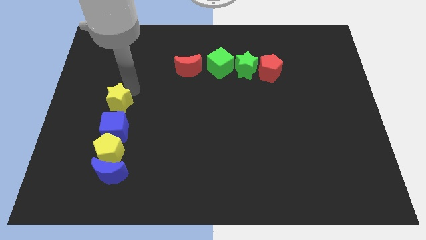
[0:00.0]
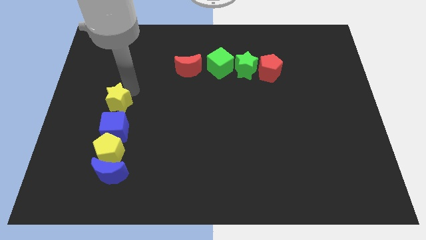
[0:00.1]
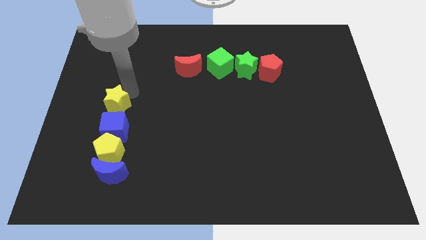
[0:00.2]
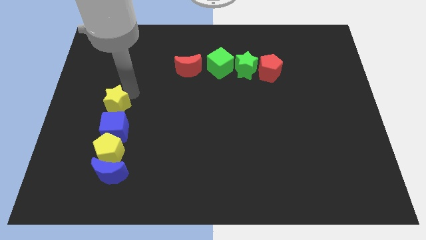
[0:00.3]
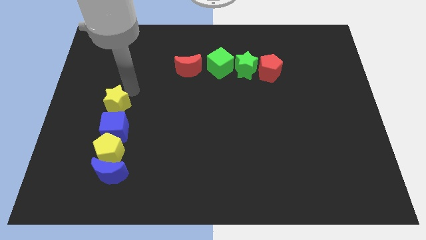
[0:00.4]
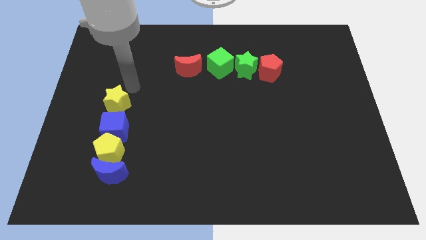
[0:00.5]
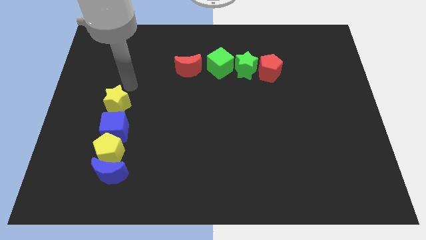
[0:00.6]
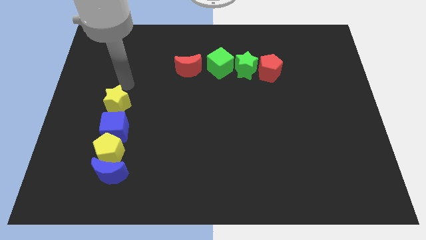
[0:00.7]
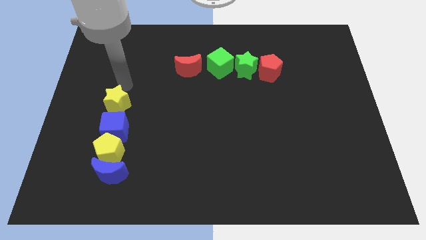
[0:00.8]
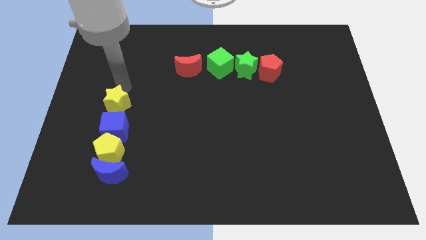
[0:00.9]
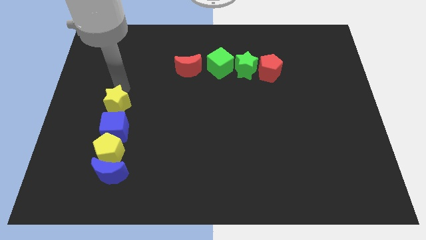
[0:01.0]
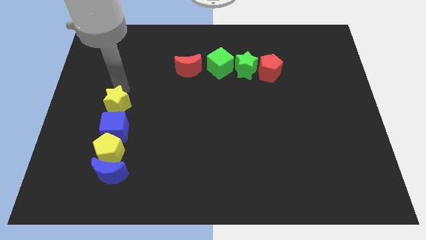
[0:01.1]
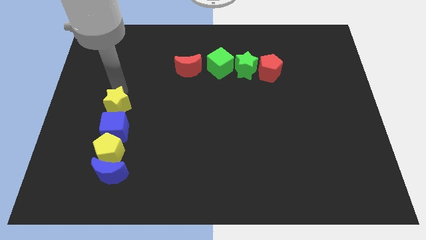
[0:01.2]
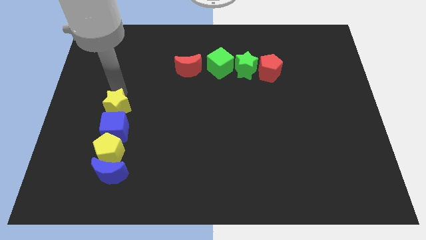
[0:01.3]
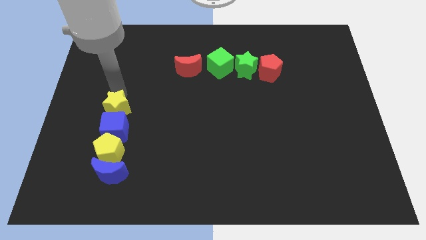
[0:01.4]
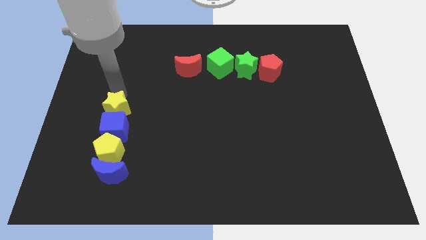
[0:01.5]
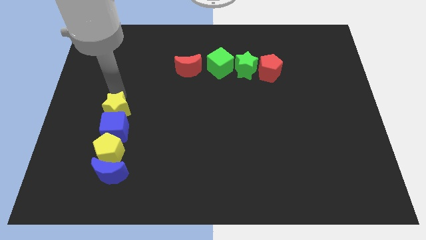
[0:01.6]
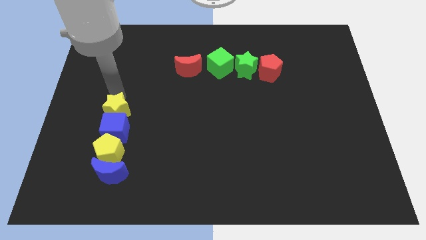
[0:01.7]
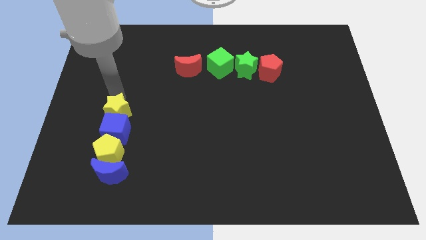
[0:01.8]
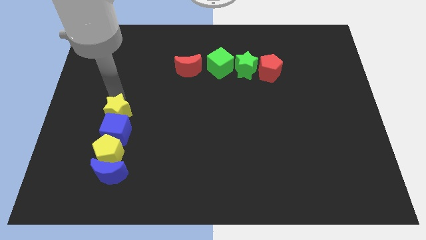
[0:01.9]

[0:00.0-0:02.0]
push the yellow star into the blue cube

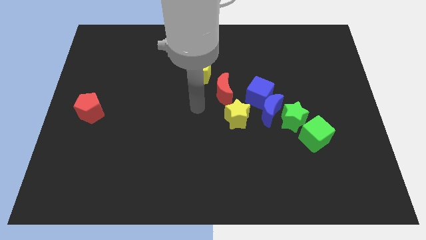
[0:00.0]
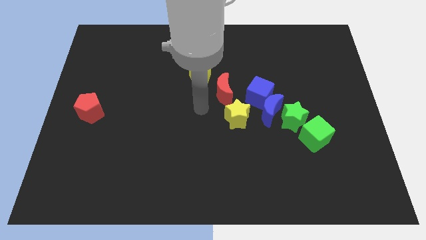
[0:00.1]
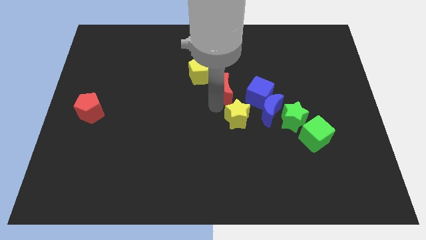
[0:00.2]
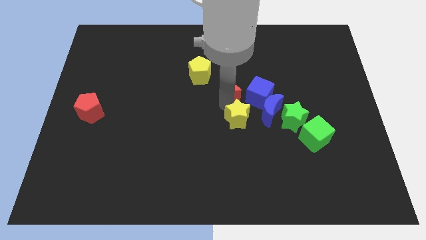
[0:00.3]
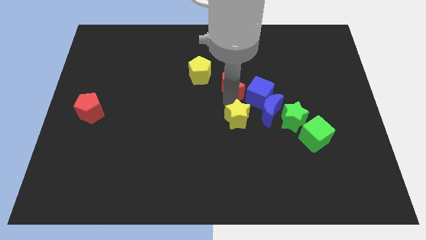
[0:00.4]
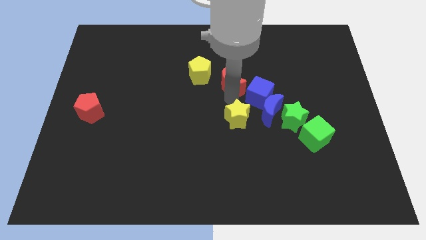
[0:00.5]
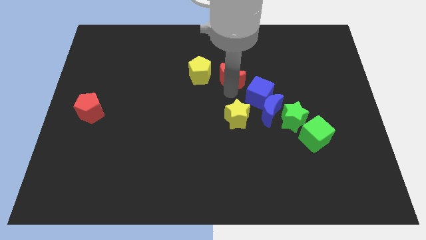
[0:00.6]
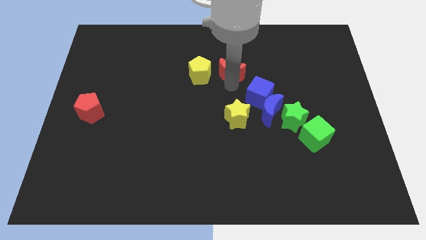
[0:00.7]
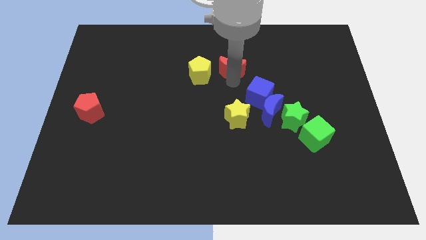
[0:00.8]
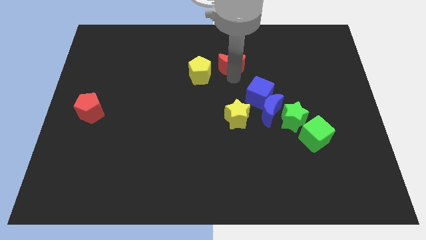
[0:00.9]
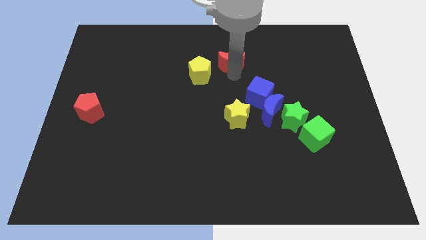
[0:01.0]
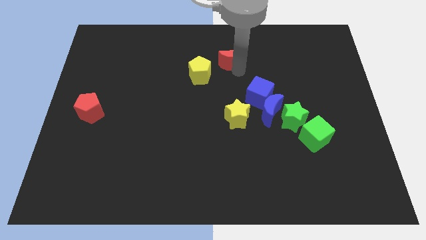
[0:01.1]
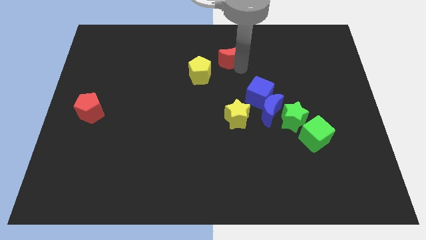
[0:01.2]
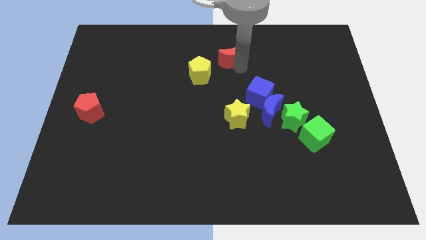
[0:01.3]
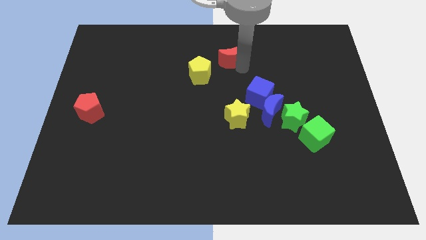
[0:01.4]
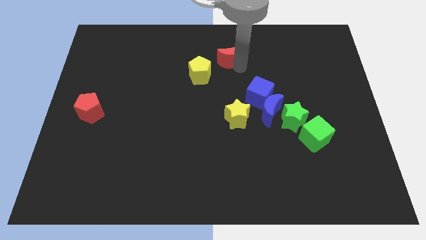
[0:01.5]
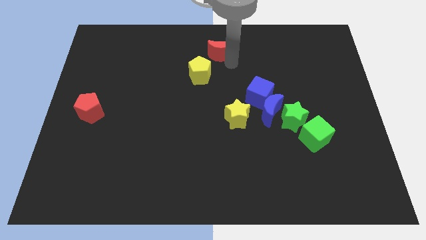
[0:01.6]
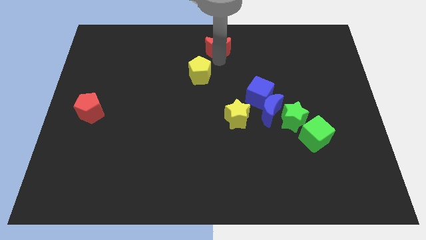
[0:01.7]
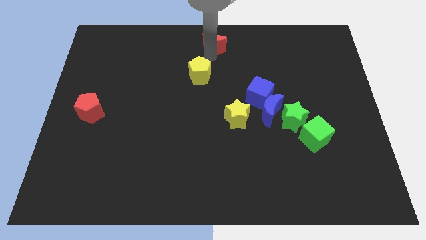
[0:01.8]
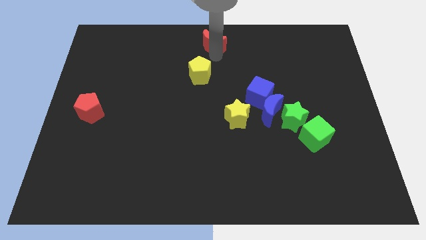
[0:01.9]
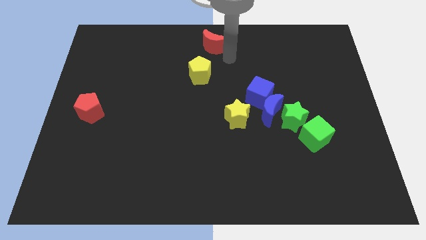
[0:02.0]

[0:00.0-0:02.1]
place the red moon to the top center of the board

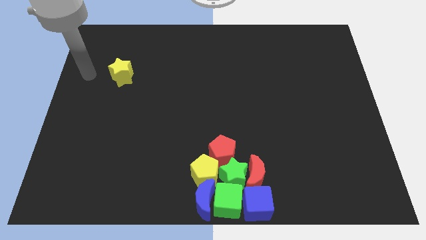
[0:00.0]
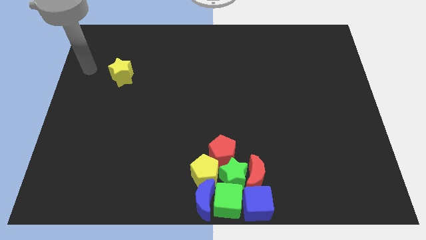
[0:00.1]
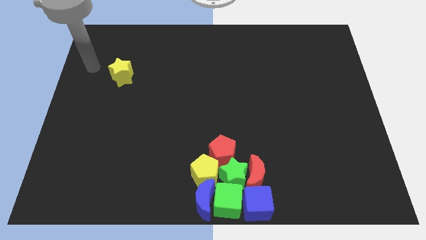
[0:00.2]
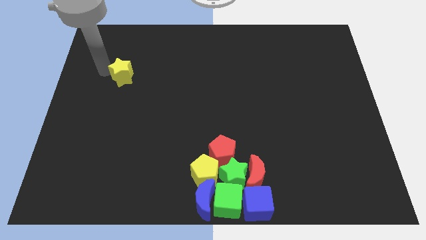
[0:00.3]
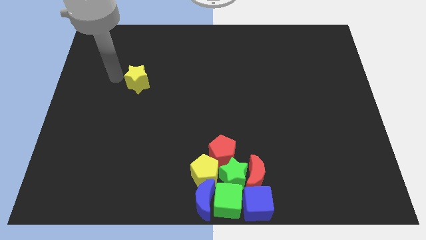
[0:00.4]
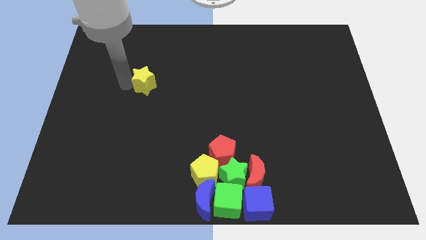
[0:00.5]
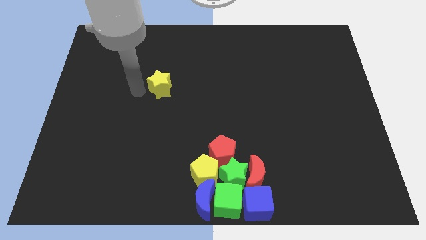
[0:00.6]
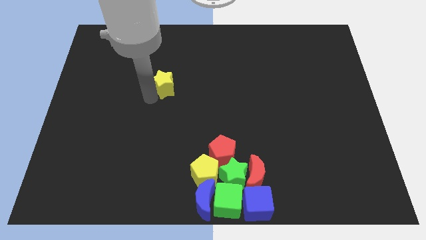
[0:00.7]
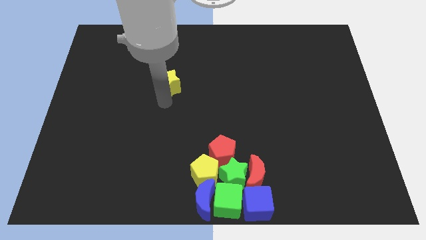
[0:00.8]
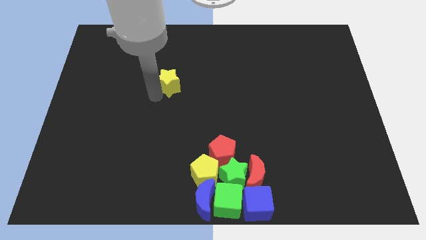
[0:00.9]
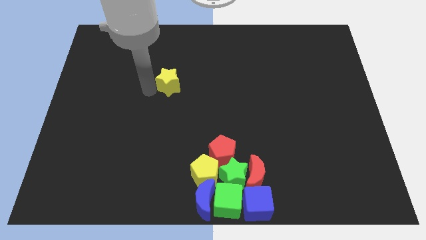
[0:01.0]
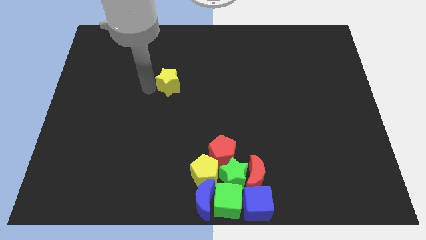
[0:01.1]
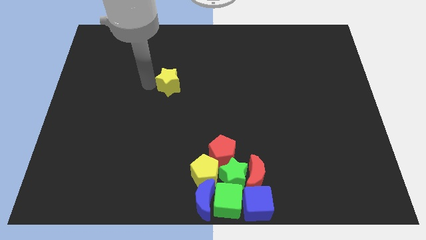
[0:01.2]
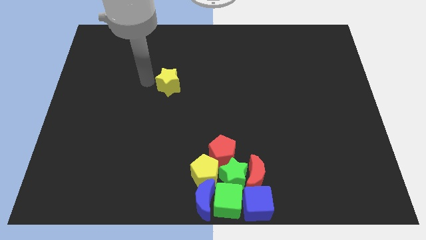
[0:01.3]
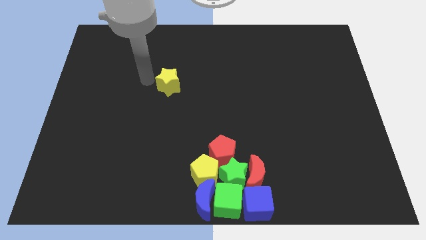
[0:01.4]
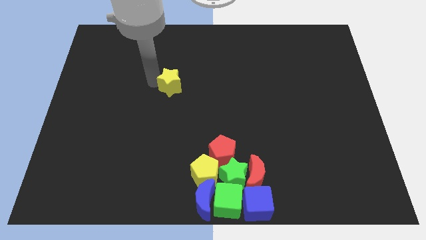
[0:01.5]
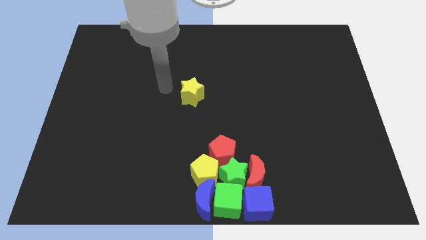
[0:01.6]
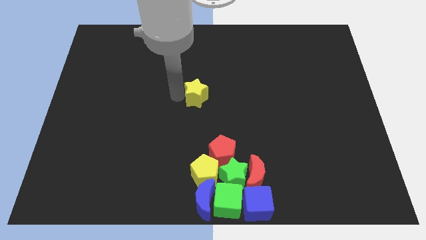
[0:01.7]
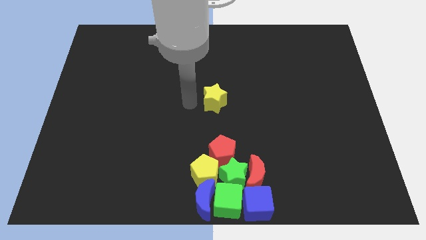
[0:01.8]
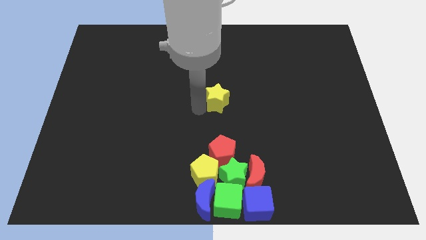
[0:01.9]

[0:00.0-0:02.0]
put the yellow star vertically above the group of blocks

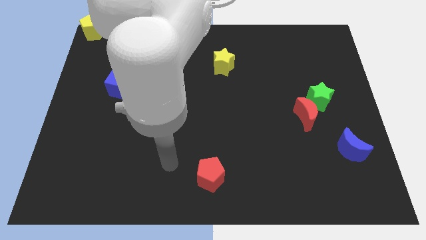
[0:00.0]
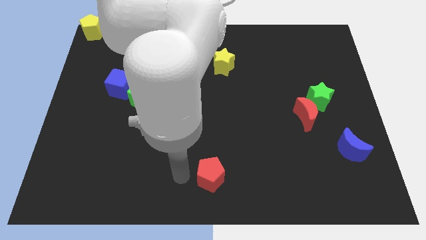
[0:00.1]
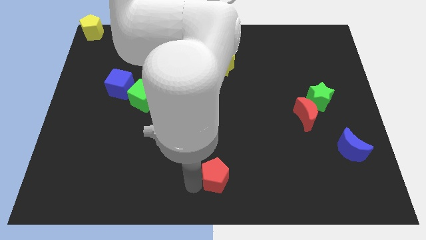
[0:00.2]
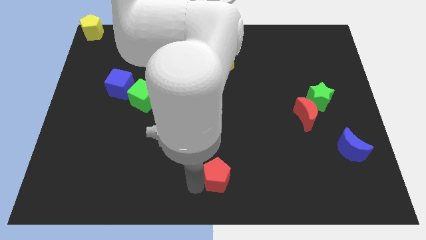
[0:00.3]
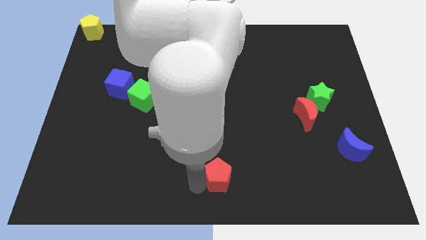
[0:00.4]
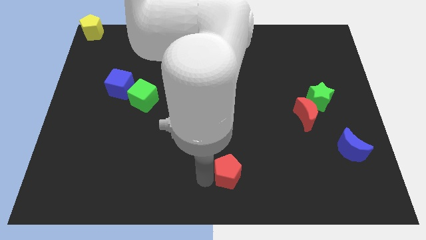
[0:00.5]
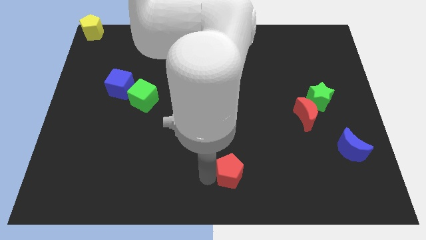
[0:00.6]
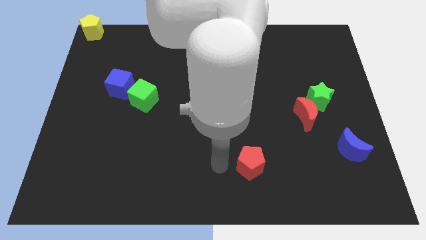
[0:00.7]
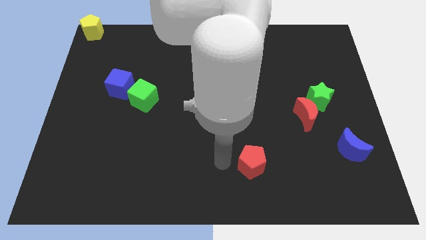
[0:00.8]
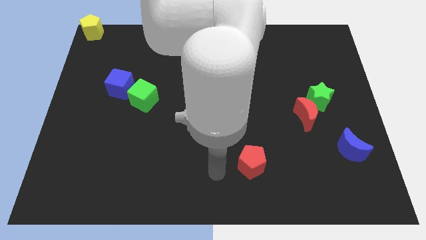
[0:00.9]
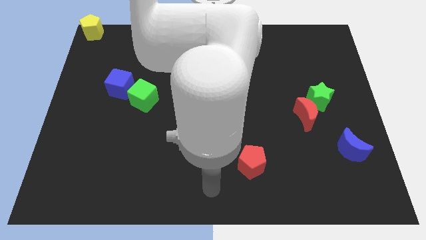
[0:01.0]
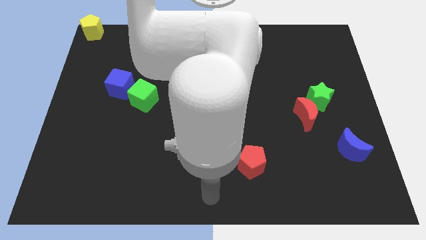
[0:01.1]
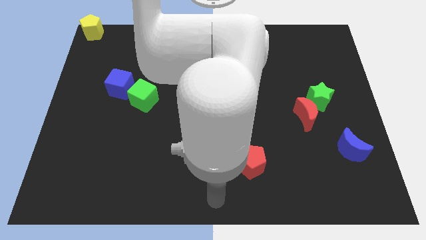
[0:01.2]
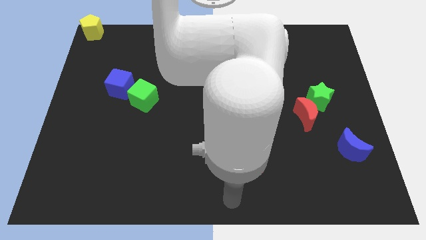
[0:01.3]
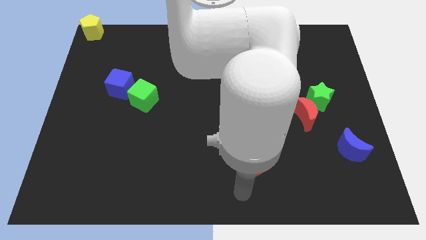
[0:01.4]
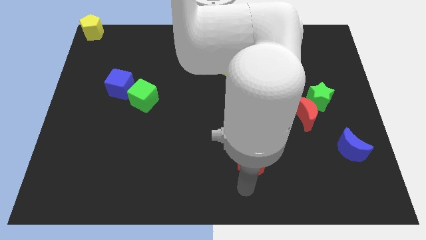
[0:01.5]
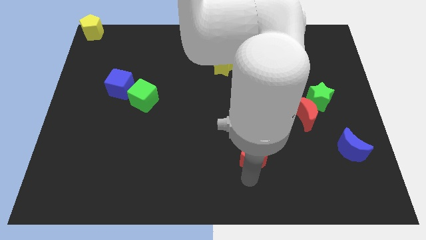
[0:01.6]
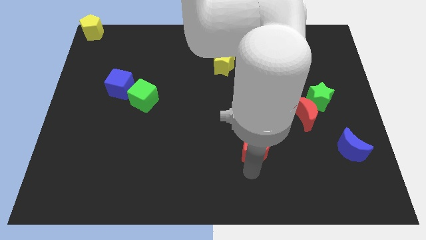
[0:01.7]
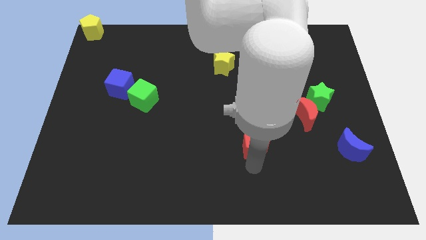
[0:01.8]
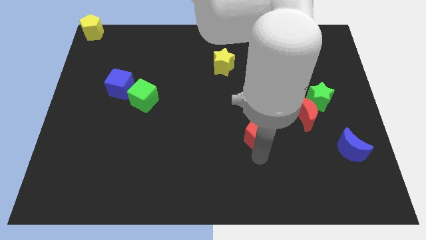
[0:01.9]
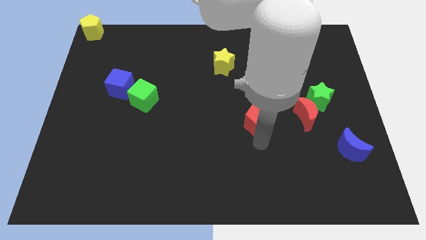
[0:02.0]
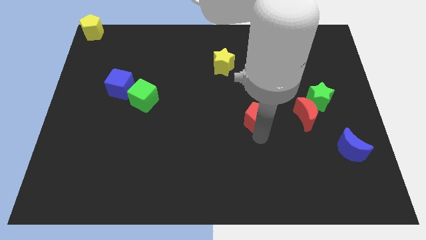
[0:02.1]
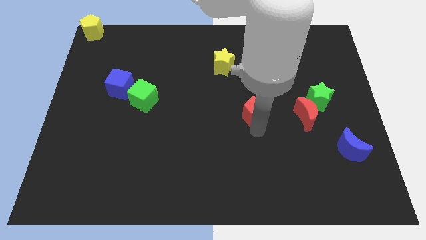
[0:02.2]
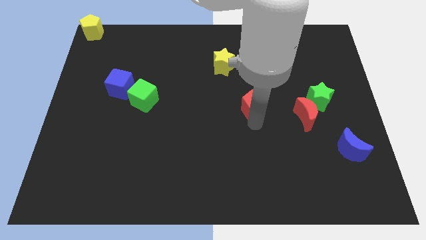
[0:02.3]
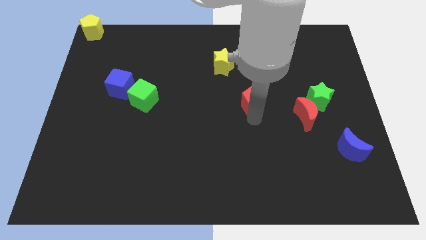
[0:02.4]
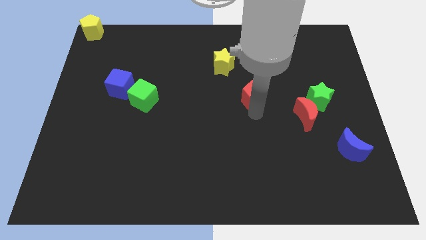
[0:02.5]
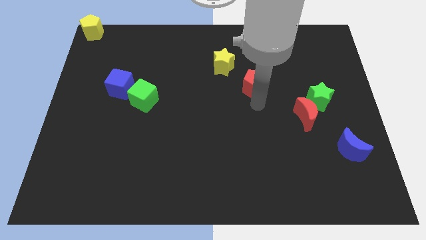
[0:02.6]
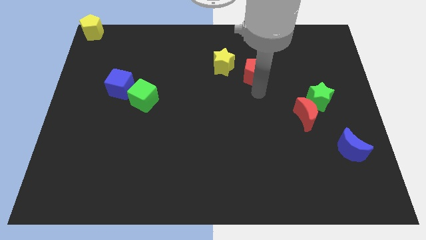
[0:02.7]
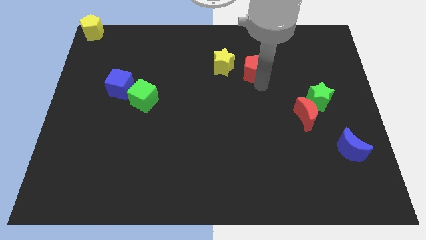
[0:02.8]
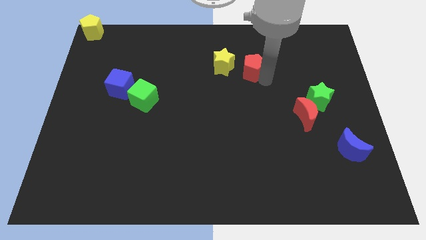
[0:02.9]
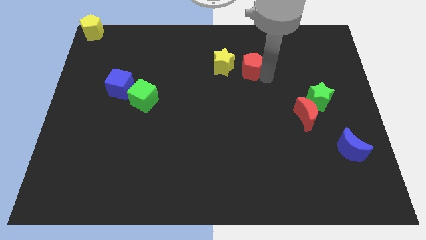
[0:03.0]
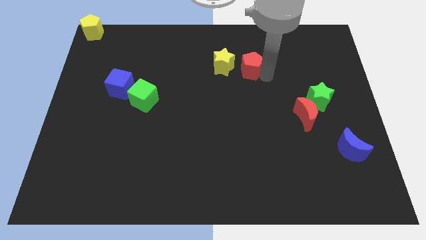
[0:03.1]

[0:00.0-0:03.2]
place red pentagon to the right of yellow star
